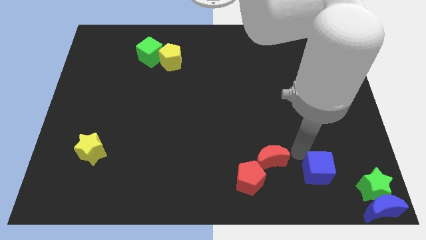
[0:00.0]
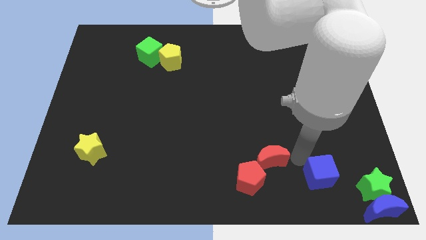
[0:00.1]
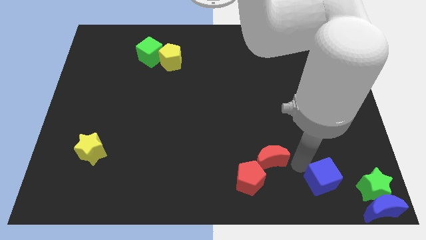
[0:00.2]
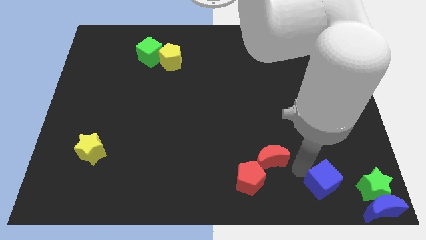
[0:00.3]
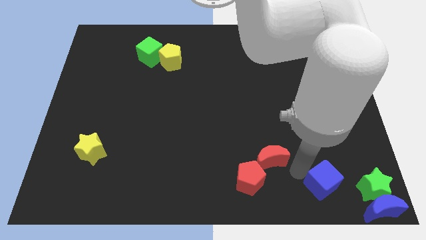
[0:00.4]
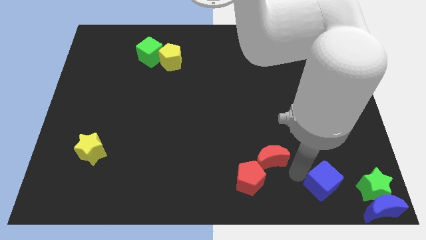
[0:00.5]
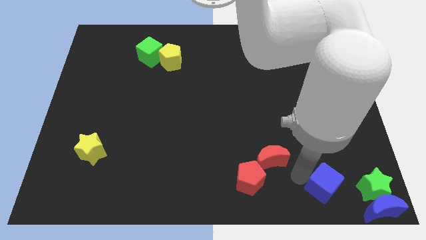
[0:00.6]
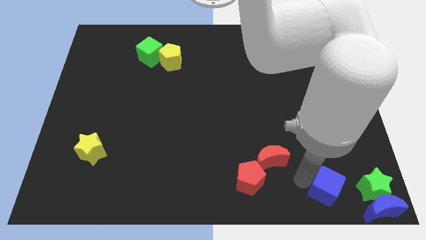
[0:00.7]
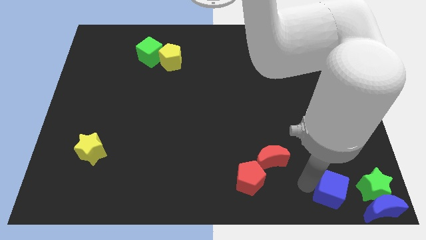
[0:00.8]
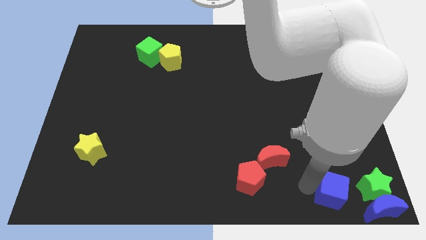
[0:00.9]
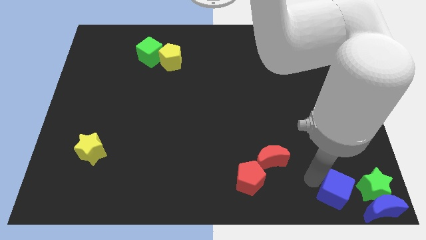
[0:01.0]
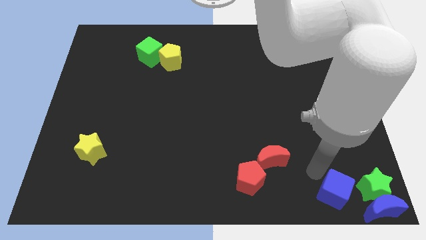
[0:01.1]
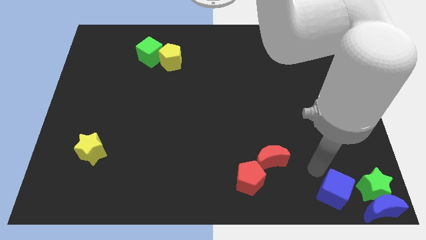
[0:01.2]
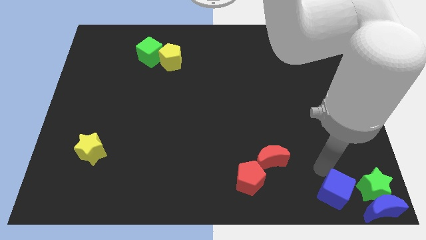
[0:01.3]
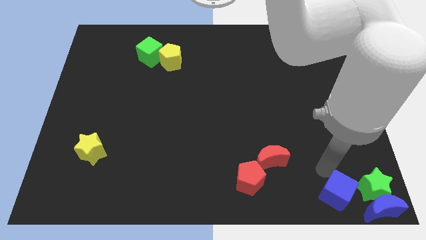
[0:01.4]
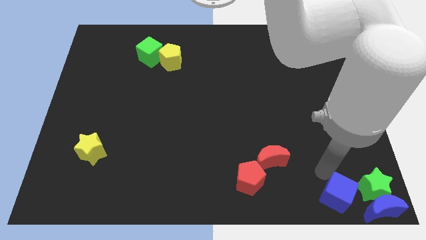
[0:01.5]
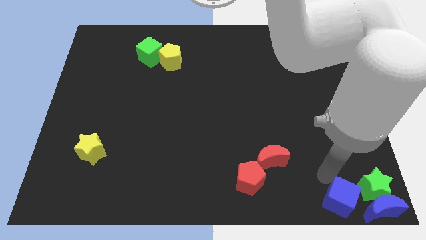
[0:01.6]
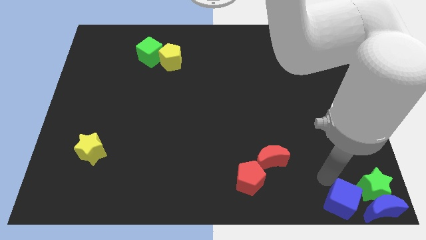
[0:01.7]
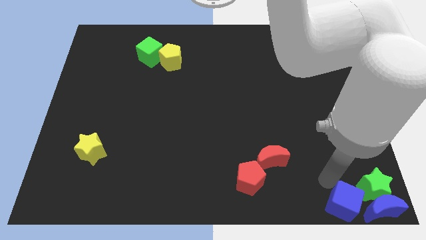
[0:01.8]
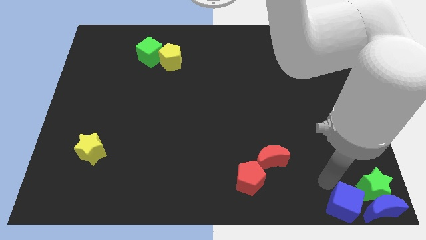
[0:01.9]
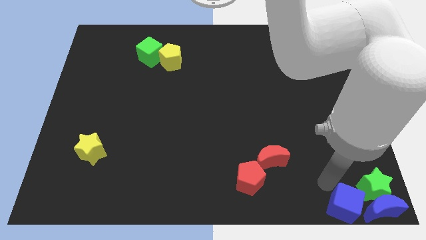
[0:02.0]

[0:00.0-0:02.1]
push the blue cube close to the blue crescent

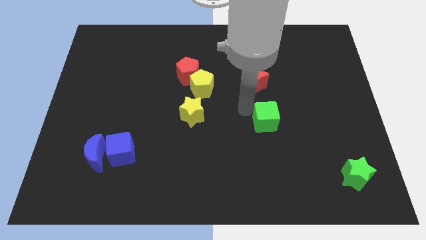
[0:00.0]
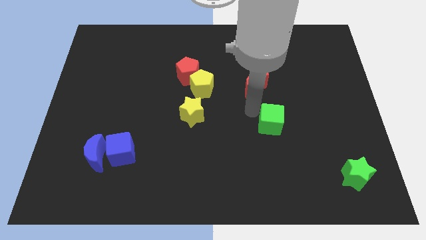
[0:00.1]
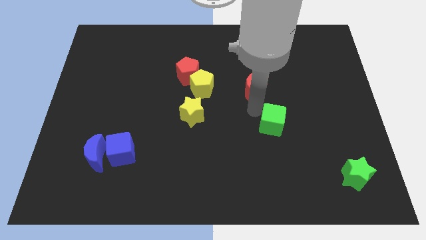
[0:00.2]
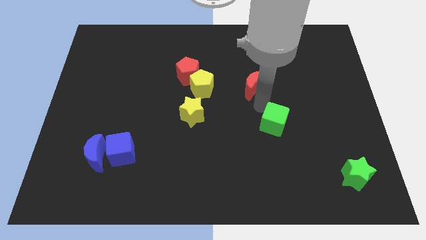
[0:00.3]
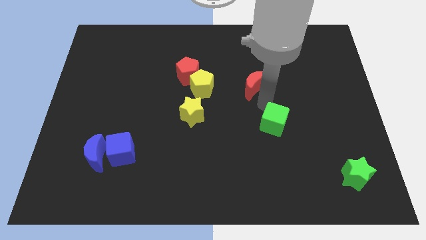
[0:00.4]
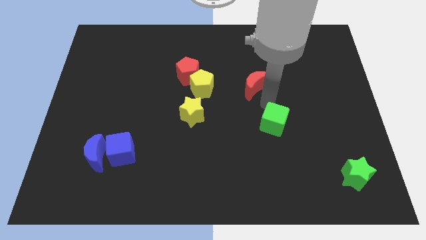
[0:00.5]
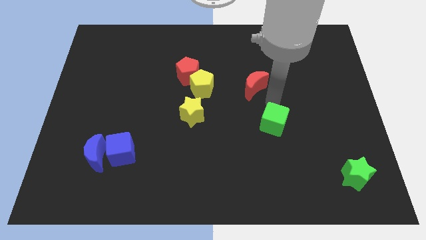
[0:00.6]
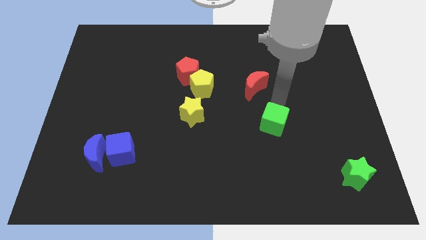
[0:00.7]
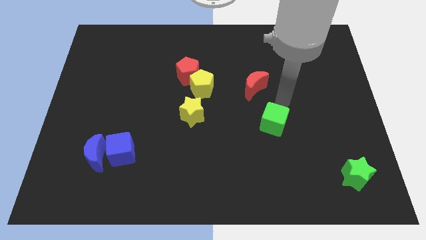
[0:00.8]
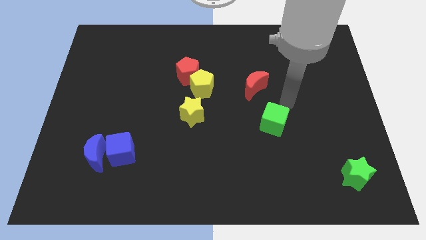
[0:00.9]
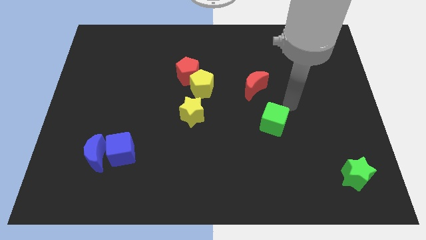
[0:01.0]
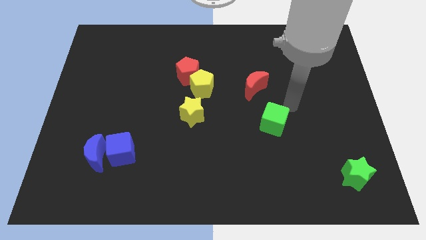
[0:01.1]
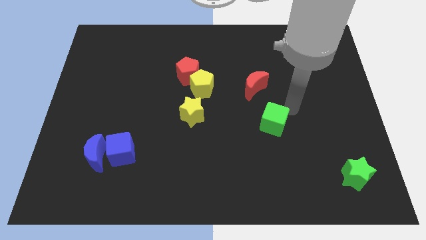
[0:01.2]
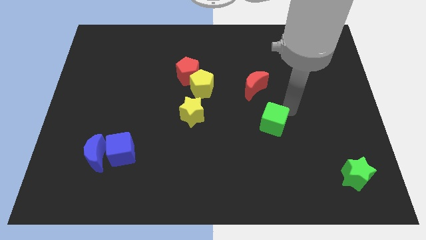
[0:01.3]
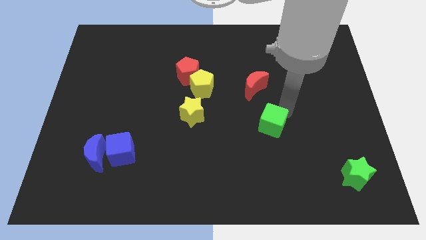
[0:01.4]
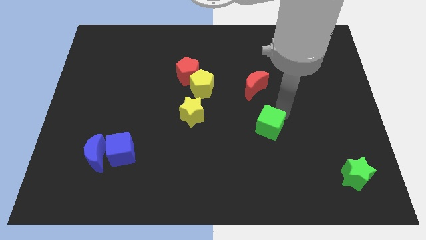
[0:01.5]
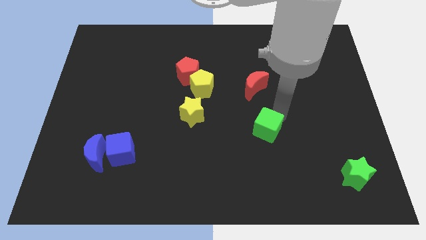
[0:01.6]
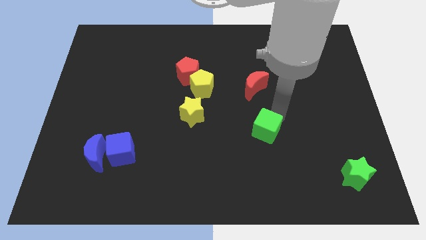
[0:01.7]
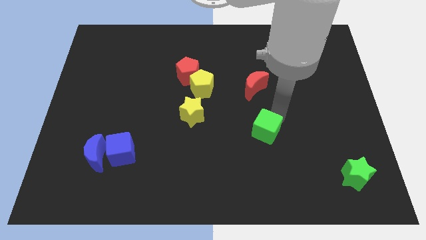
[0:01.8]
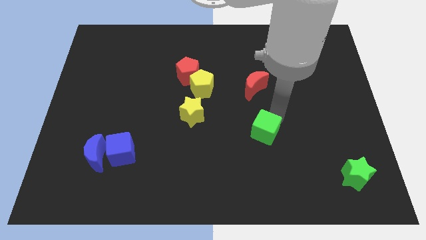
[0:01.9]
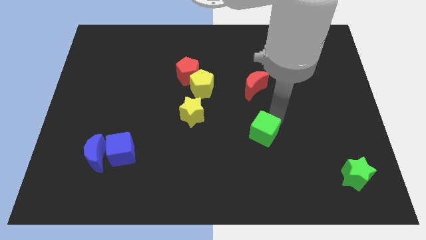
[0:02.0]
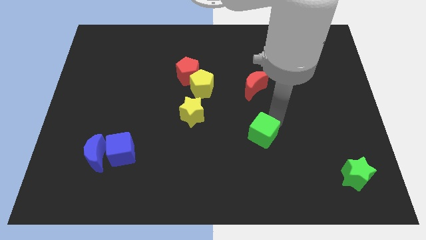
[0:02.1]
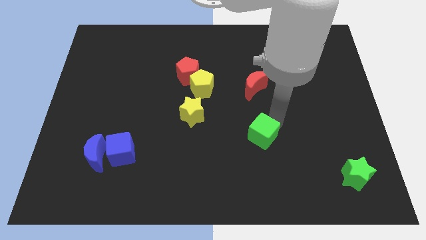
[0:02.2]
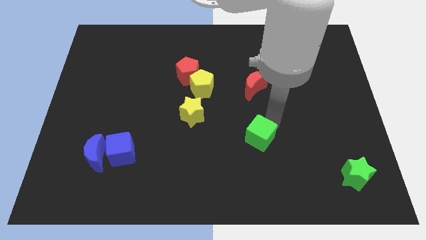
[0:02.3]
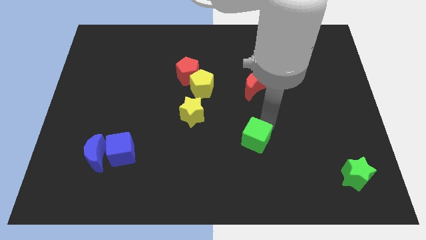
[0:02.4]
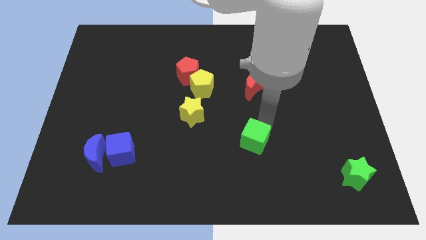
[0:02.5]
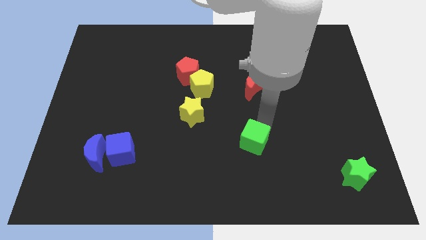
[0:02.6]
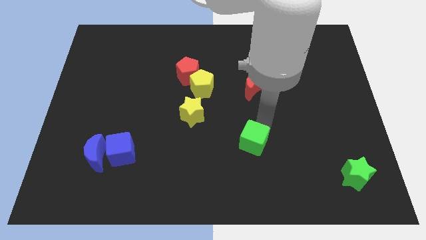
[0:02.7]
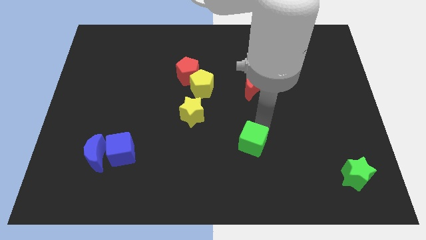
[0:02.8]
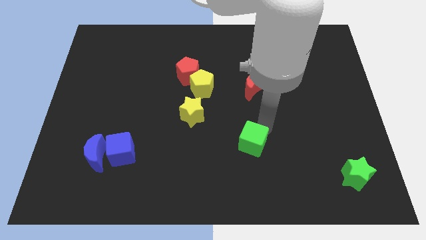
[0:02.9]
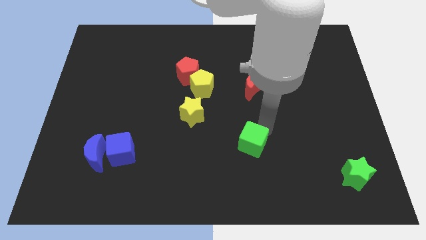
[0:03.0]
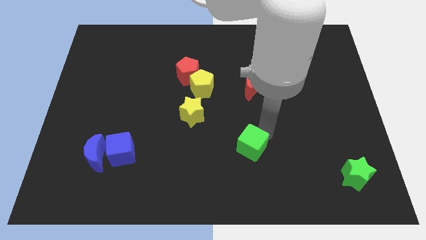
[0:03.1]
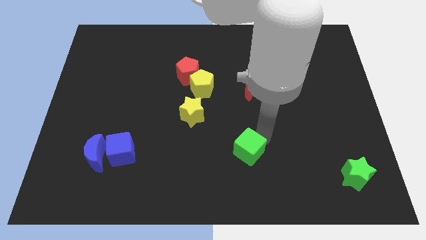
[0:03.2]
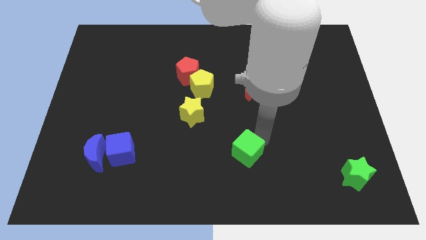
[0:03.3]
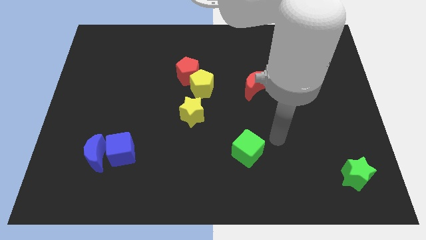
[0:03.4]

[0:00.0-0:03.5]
push the green cube diagonal bottom right to the yellow star

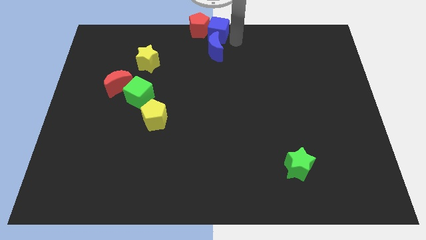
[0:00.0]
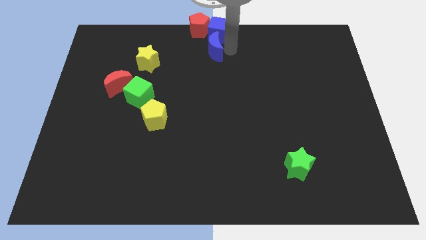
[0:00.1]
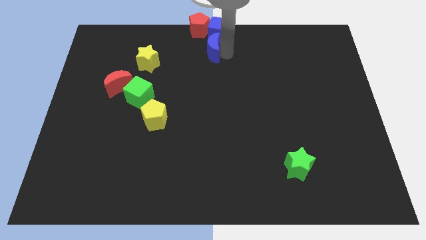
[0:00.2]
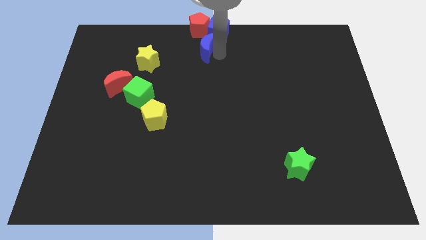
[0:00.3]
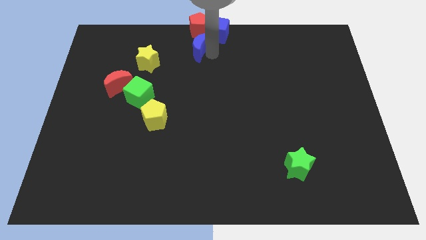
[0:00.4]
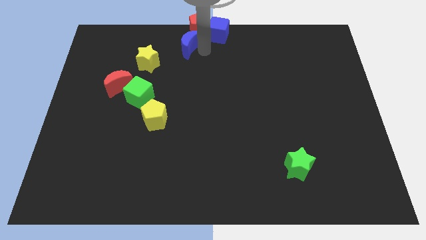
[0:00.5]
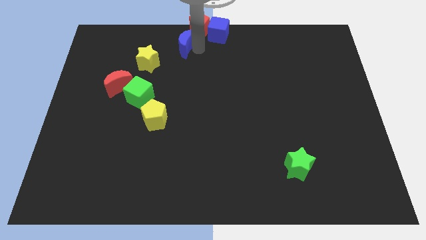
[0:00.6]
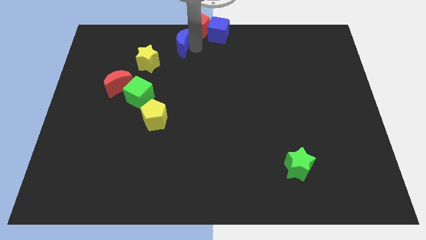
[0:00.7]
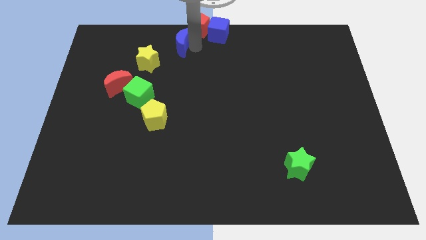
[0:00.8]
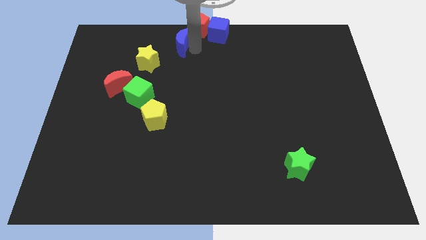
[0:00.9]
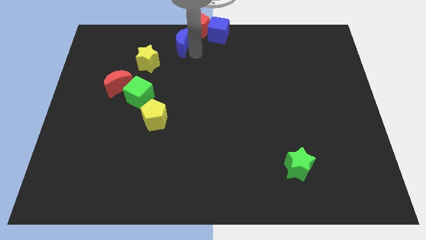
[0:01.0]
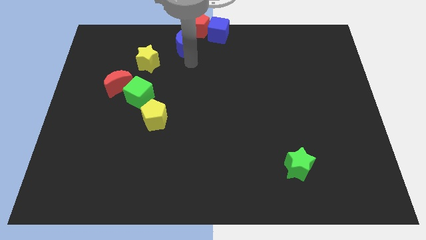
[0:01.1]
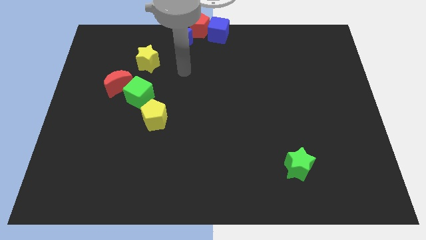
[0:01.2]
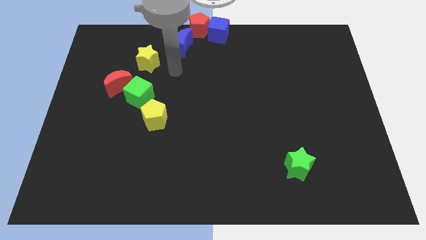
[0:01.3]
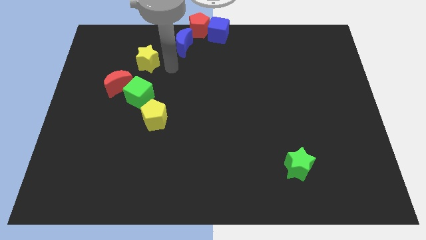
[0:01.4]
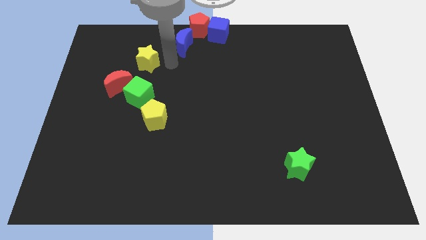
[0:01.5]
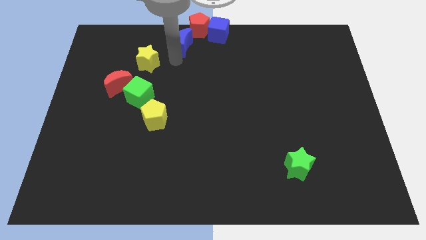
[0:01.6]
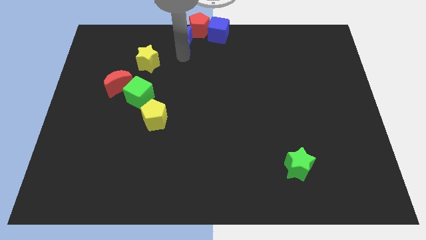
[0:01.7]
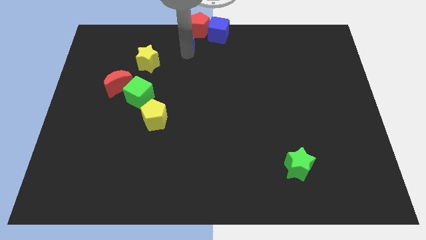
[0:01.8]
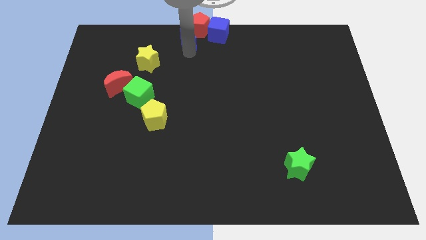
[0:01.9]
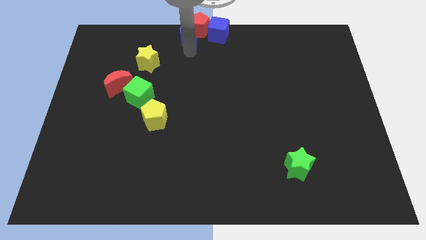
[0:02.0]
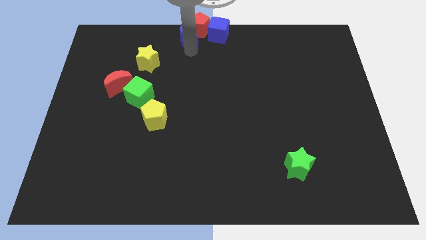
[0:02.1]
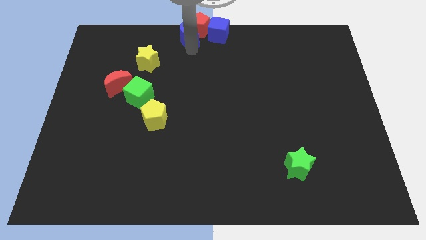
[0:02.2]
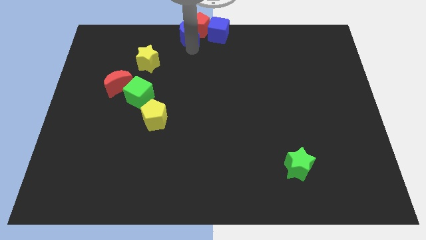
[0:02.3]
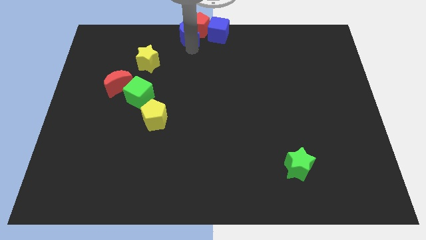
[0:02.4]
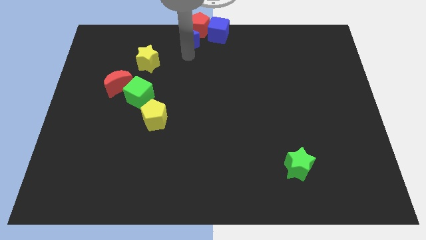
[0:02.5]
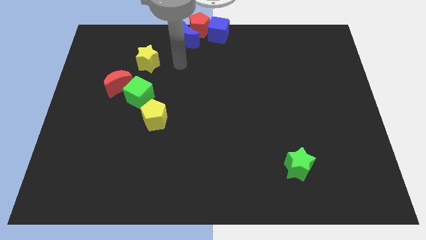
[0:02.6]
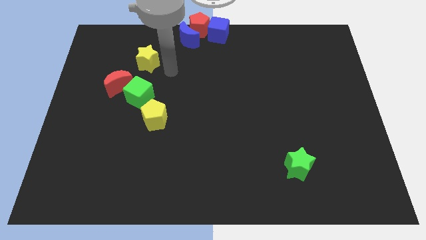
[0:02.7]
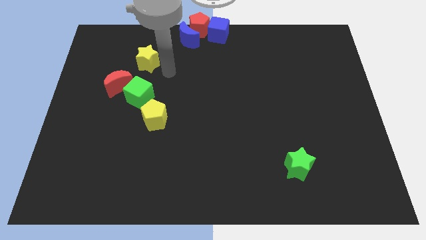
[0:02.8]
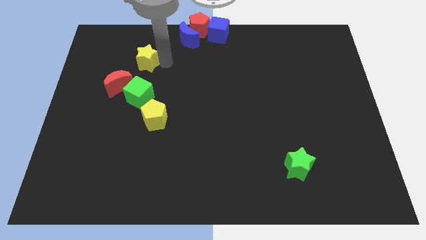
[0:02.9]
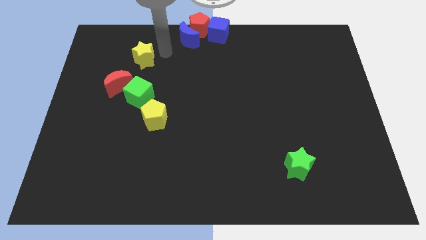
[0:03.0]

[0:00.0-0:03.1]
move the blue crescent to the bottom left of the red pentagon

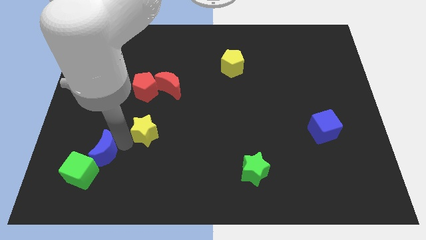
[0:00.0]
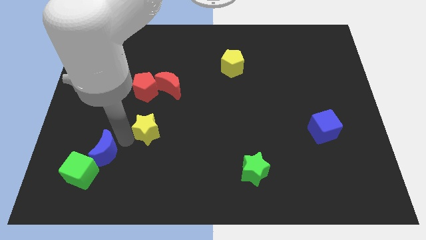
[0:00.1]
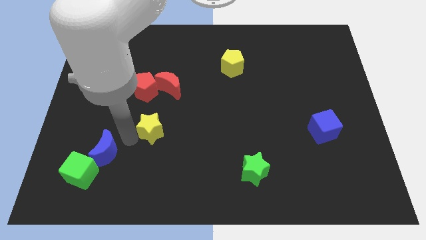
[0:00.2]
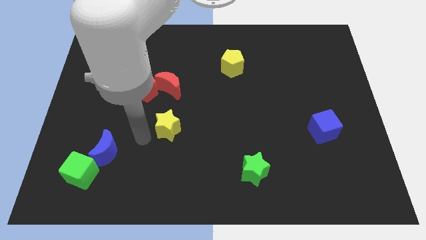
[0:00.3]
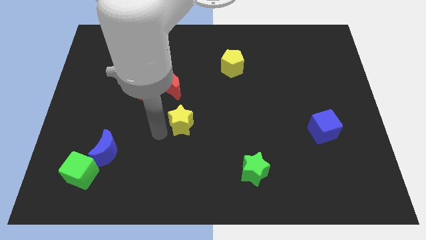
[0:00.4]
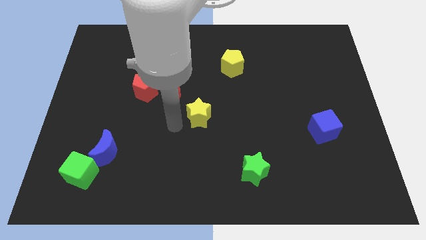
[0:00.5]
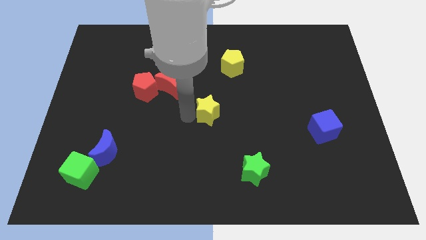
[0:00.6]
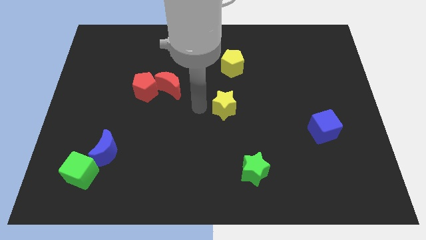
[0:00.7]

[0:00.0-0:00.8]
slide the yellow star into the center
